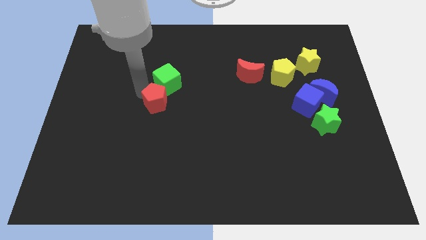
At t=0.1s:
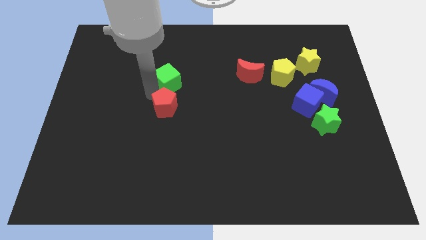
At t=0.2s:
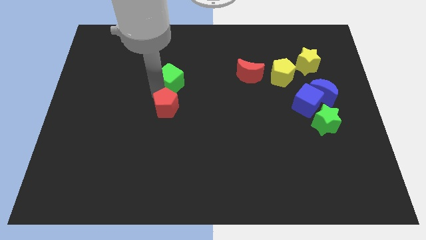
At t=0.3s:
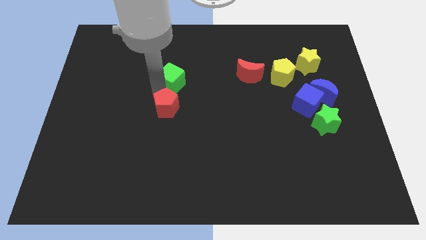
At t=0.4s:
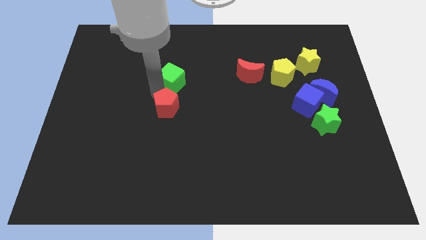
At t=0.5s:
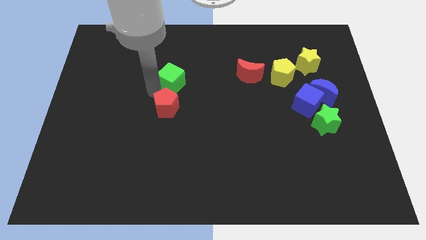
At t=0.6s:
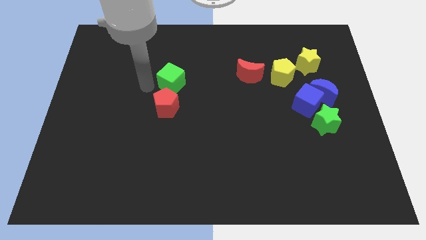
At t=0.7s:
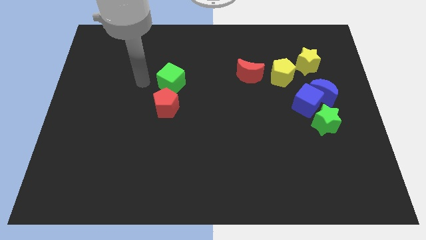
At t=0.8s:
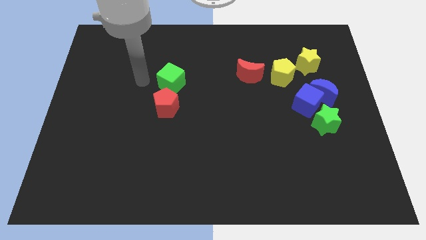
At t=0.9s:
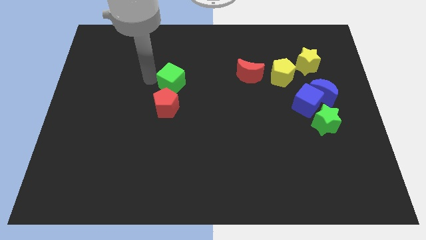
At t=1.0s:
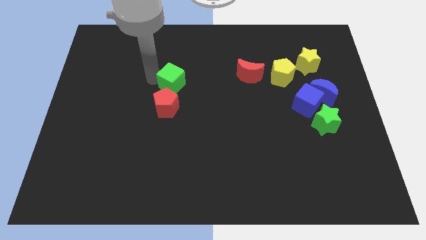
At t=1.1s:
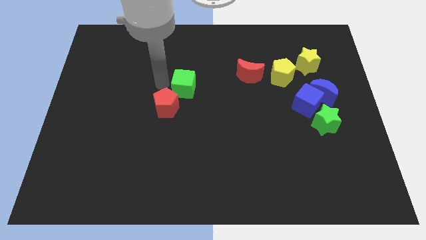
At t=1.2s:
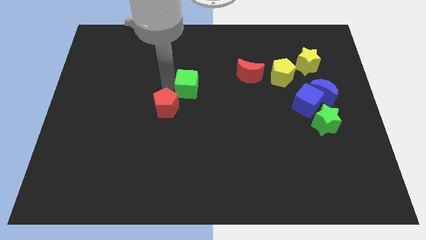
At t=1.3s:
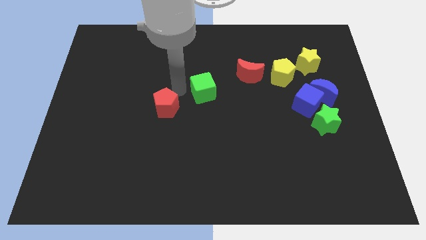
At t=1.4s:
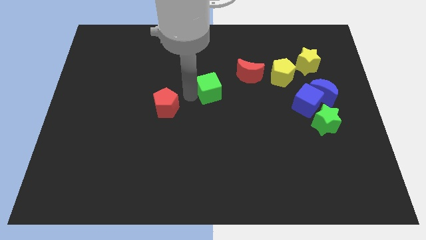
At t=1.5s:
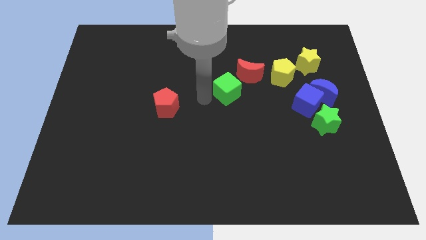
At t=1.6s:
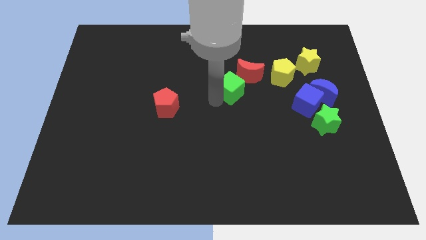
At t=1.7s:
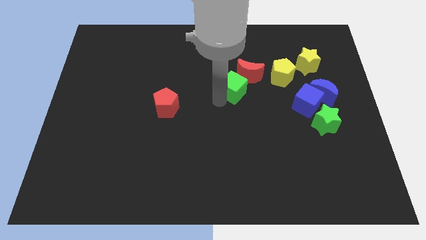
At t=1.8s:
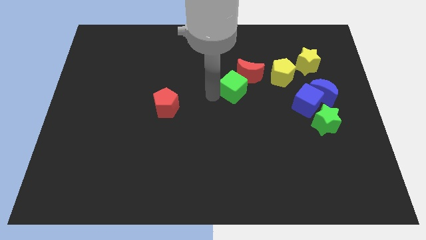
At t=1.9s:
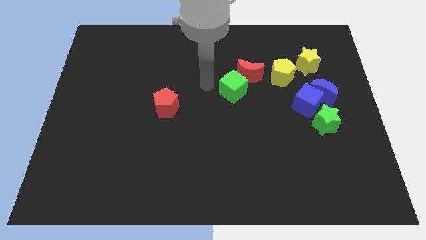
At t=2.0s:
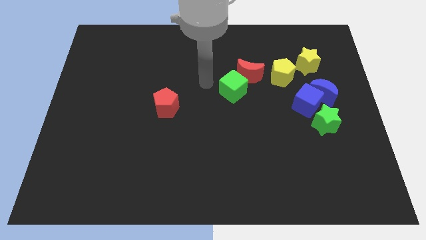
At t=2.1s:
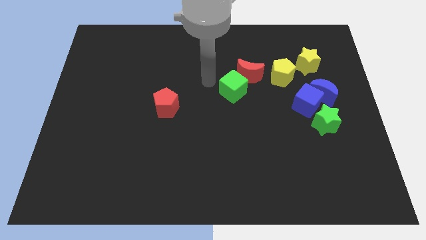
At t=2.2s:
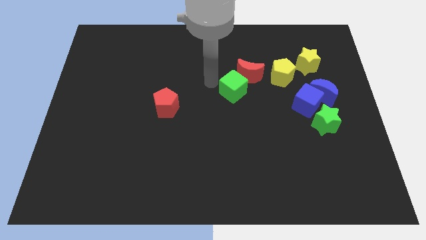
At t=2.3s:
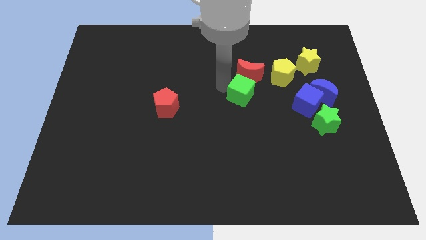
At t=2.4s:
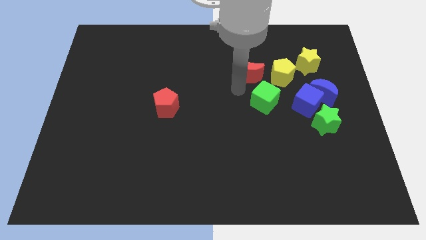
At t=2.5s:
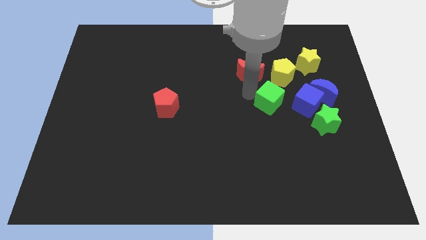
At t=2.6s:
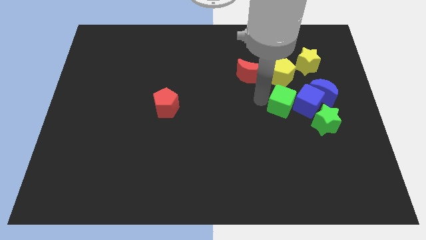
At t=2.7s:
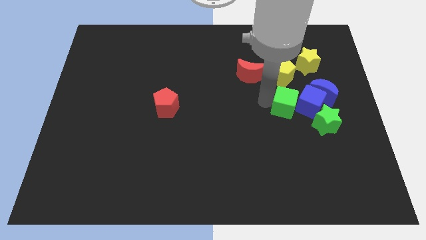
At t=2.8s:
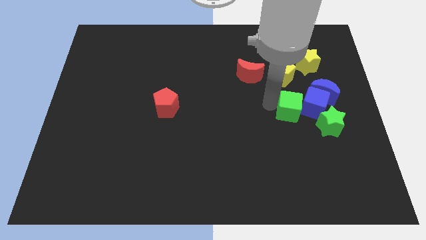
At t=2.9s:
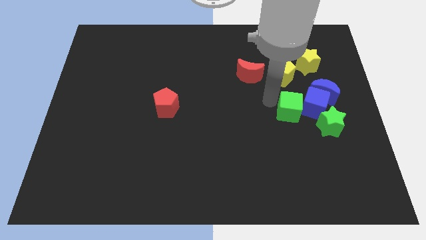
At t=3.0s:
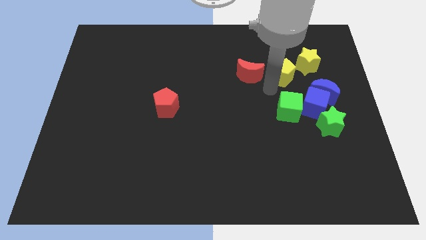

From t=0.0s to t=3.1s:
push the green cube to the left of the blue cube

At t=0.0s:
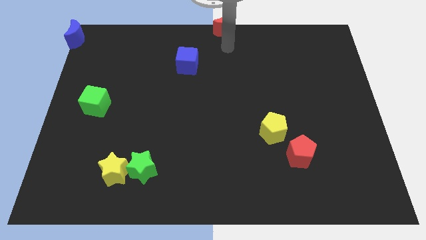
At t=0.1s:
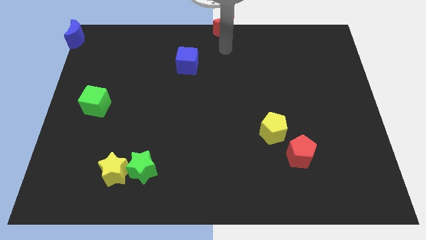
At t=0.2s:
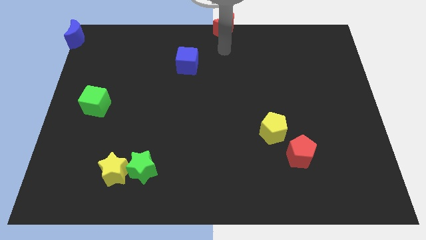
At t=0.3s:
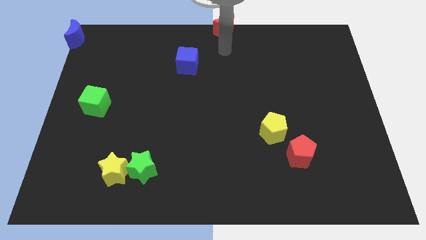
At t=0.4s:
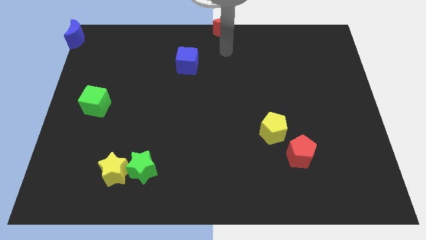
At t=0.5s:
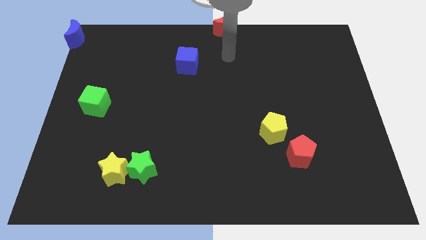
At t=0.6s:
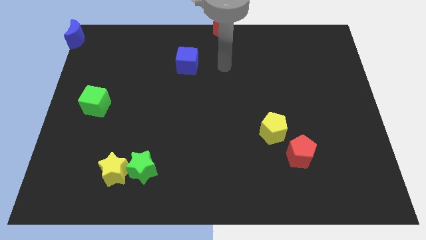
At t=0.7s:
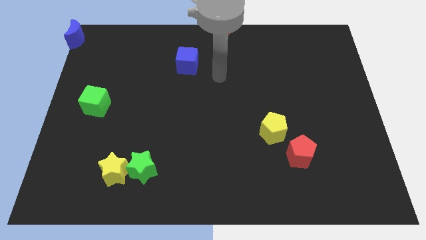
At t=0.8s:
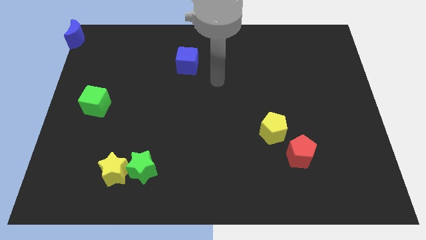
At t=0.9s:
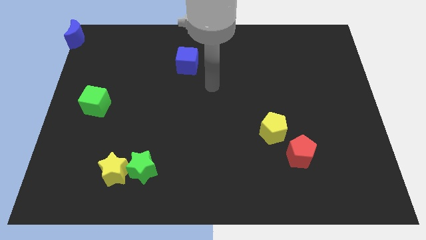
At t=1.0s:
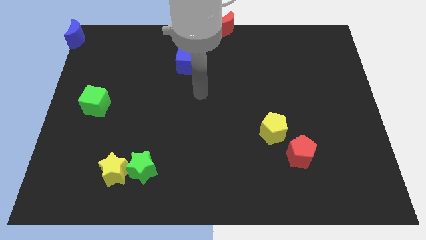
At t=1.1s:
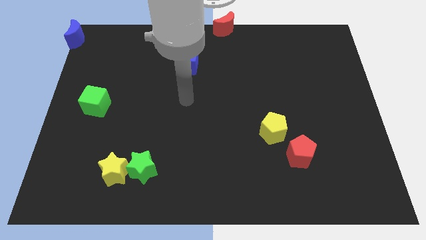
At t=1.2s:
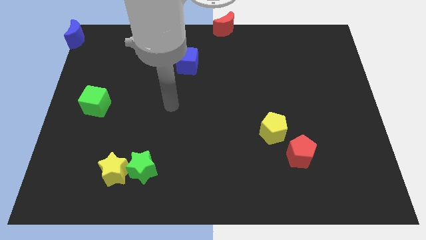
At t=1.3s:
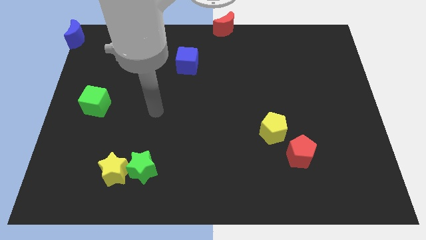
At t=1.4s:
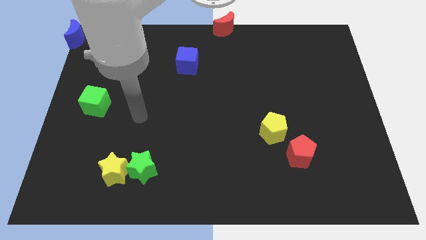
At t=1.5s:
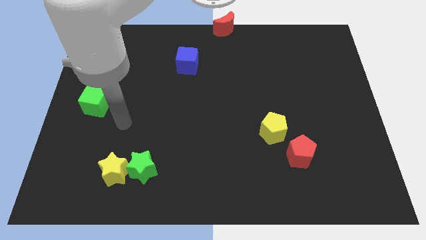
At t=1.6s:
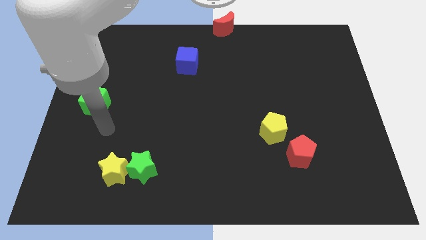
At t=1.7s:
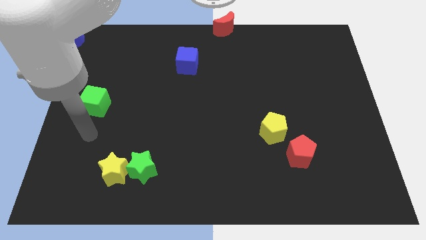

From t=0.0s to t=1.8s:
go away from the red moon

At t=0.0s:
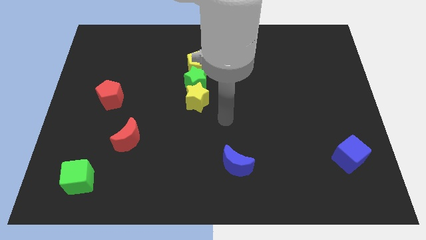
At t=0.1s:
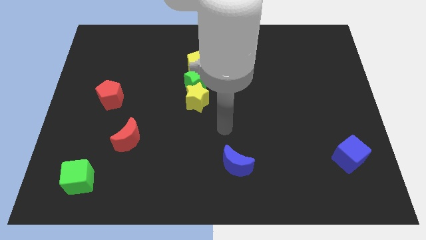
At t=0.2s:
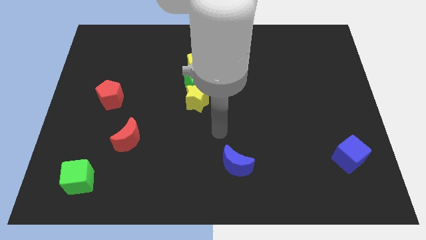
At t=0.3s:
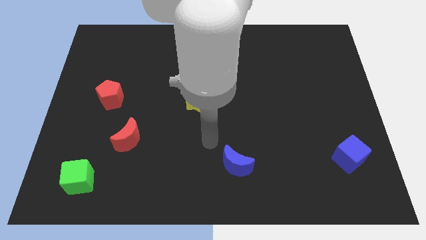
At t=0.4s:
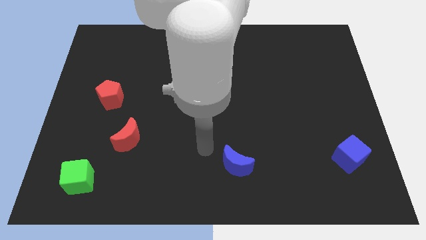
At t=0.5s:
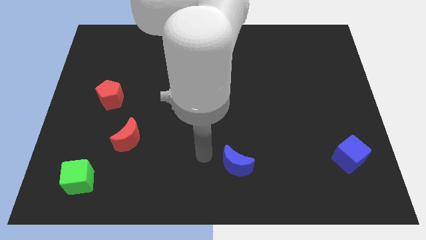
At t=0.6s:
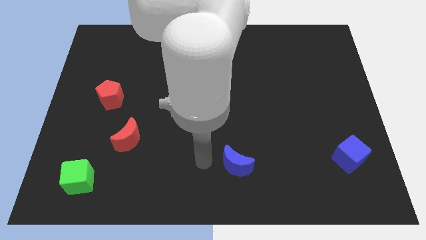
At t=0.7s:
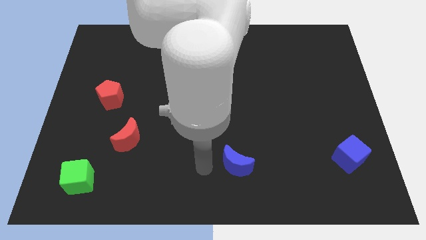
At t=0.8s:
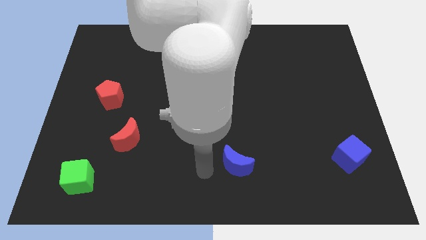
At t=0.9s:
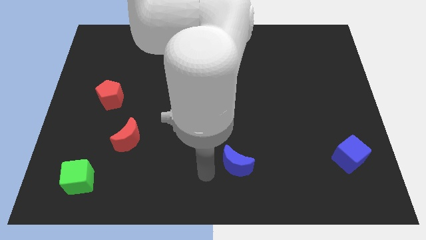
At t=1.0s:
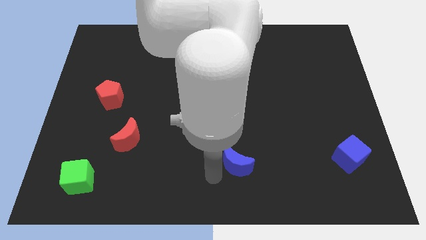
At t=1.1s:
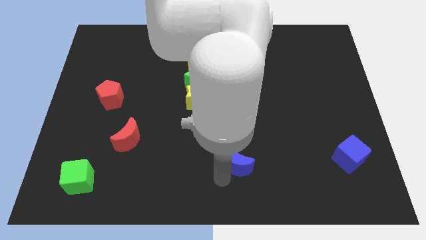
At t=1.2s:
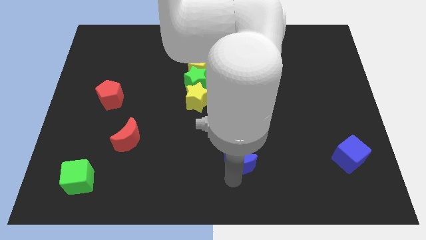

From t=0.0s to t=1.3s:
move your arm around the blue moon

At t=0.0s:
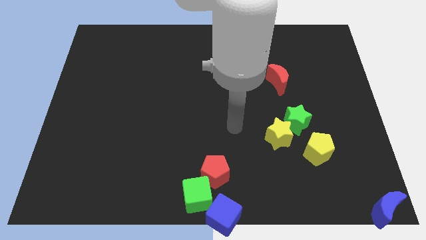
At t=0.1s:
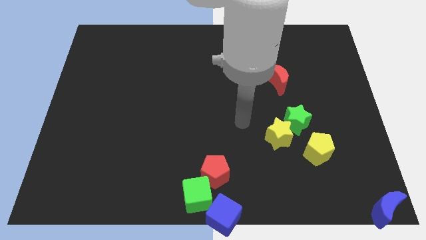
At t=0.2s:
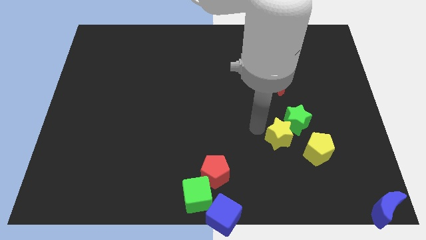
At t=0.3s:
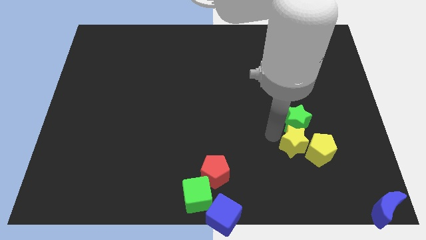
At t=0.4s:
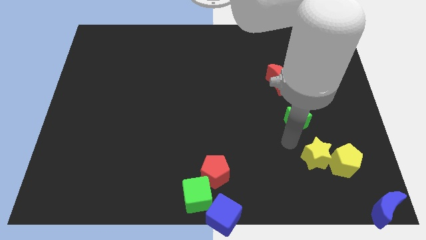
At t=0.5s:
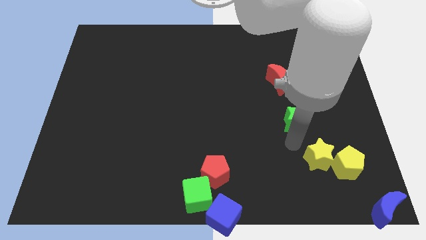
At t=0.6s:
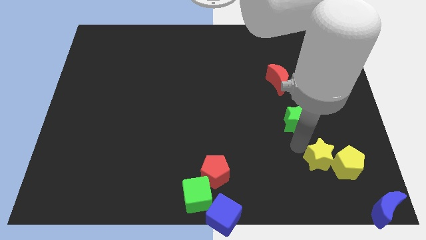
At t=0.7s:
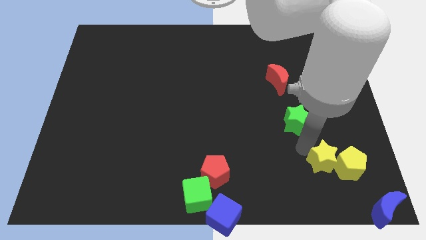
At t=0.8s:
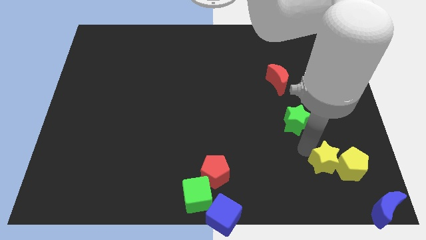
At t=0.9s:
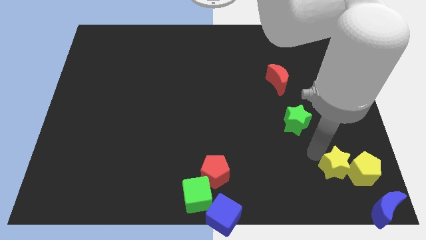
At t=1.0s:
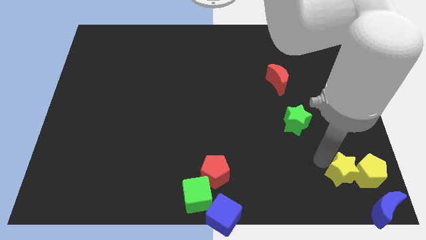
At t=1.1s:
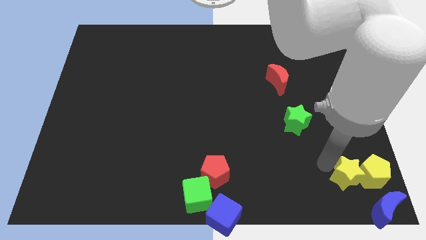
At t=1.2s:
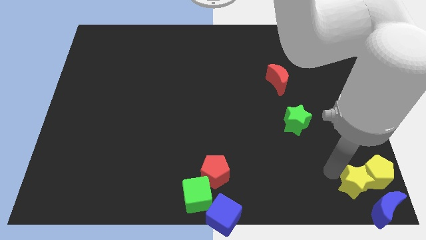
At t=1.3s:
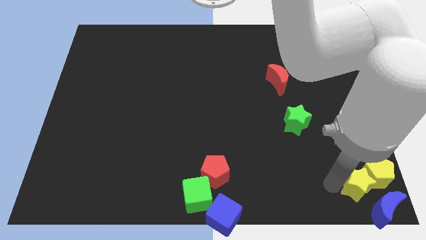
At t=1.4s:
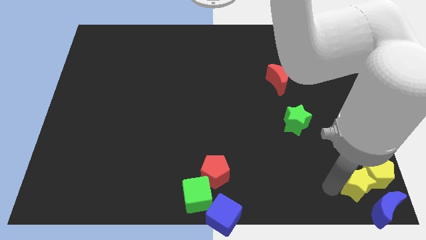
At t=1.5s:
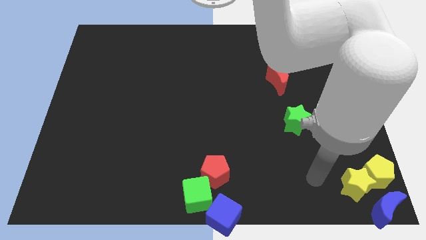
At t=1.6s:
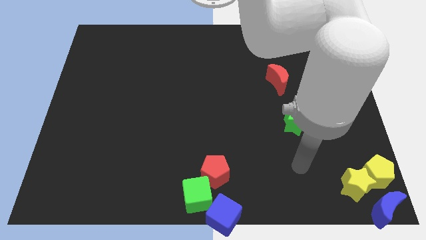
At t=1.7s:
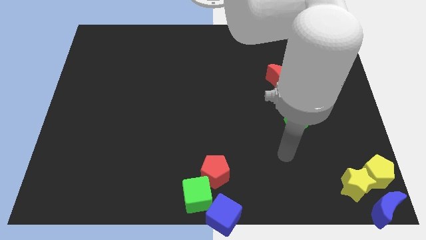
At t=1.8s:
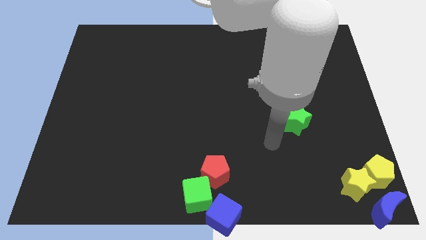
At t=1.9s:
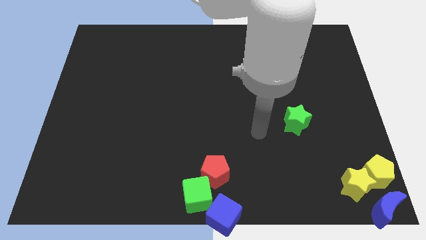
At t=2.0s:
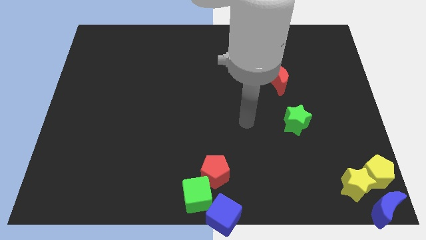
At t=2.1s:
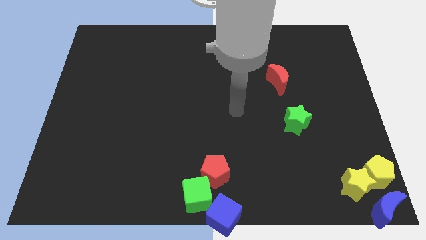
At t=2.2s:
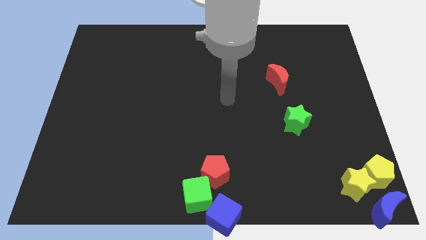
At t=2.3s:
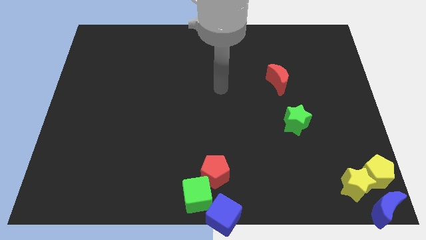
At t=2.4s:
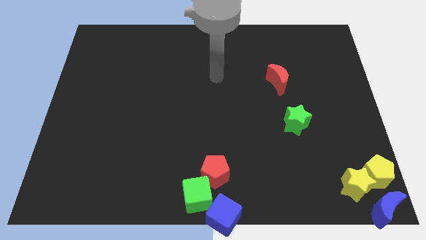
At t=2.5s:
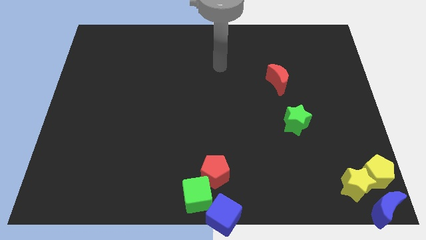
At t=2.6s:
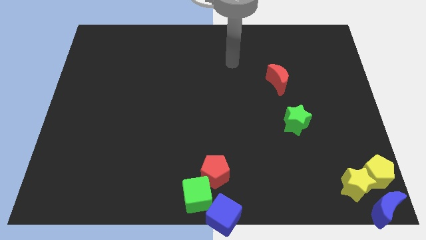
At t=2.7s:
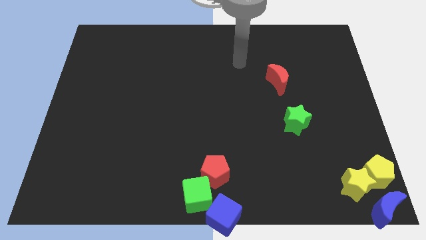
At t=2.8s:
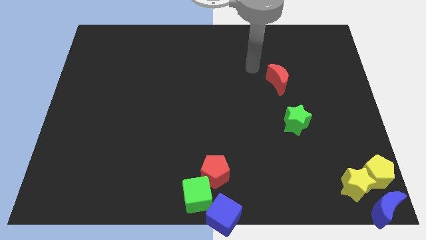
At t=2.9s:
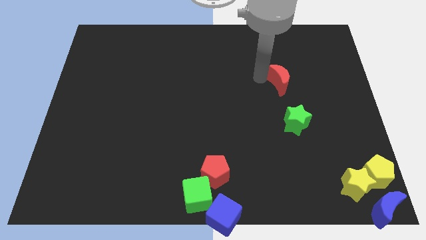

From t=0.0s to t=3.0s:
push the yellow star into the yellow pentagon to the bottom right
